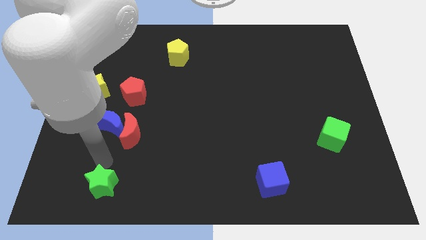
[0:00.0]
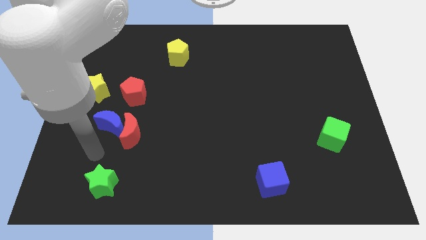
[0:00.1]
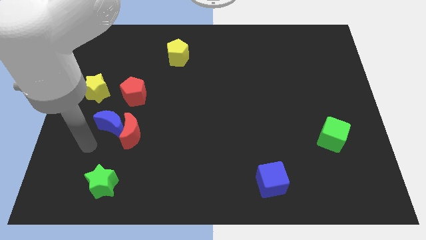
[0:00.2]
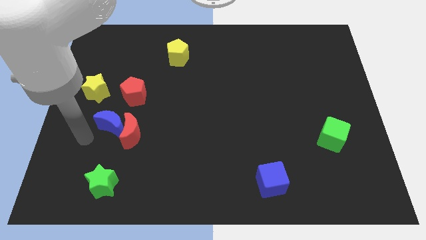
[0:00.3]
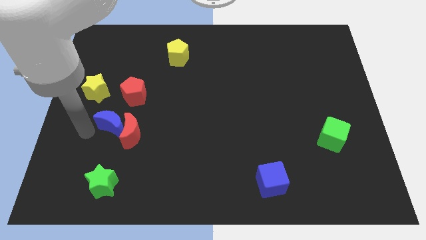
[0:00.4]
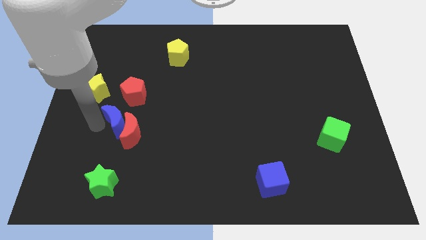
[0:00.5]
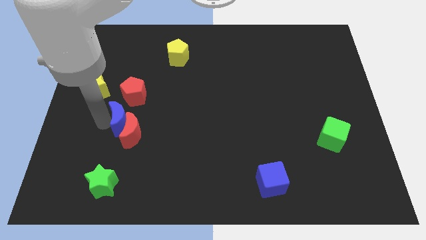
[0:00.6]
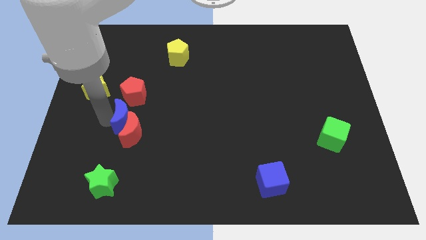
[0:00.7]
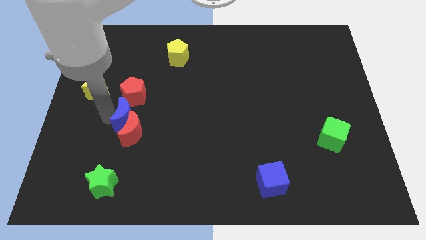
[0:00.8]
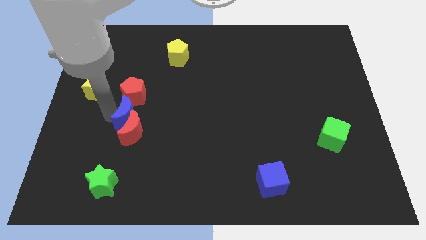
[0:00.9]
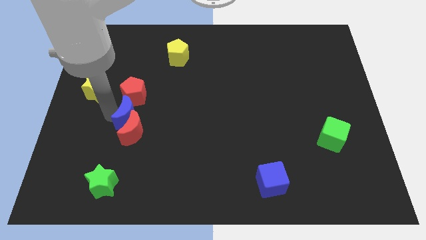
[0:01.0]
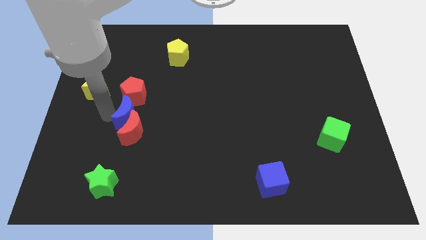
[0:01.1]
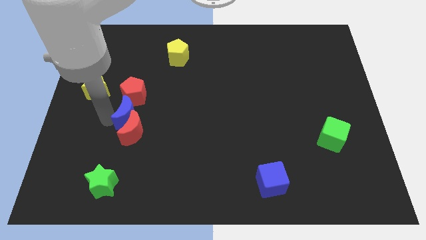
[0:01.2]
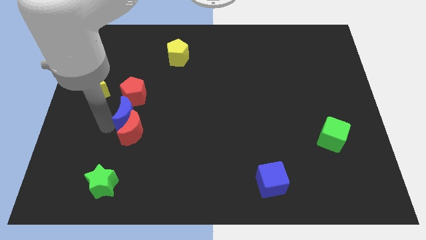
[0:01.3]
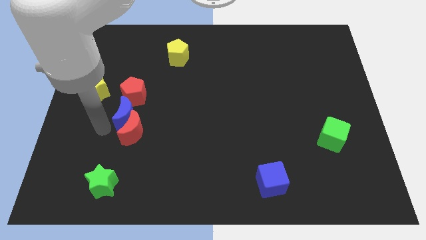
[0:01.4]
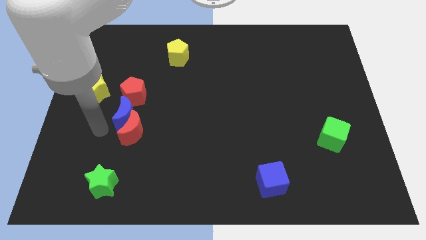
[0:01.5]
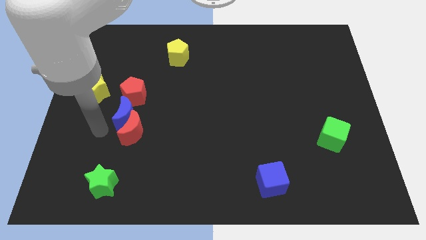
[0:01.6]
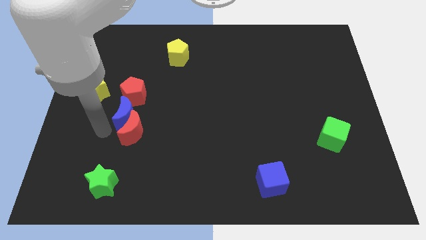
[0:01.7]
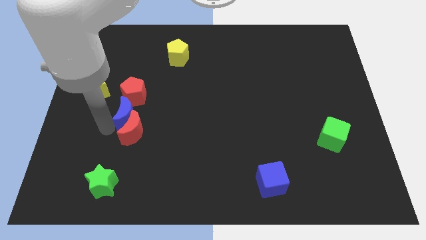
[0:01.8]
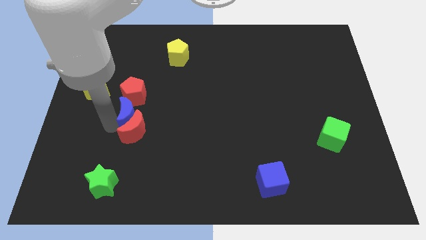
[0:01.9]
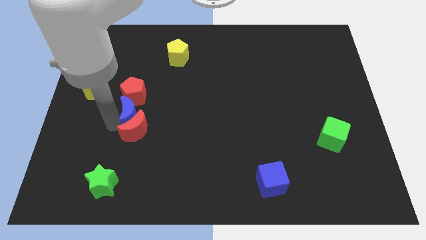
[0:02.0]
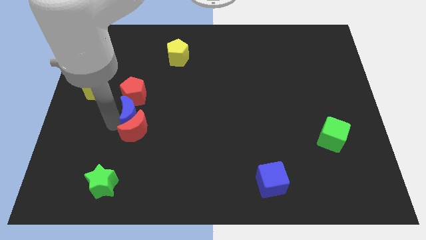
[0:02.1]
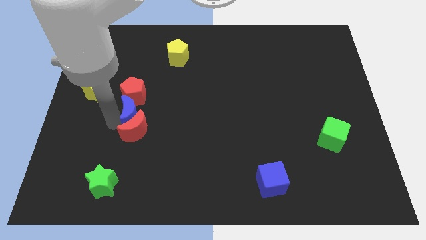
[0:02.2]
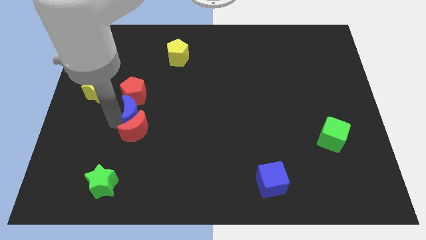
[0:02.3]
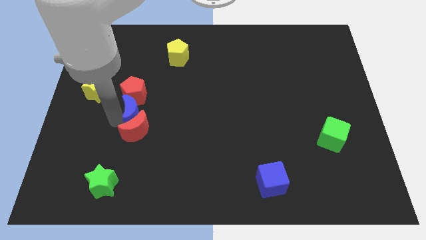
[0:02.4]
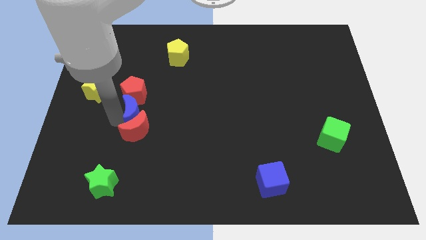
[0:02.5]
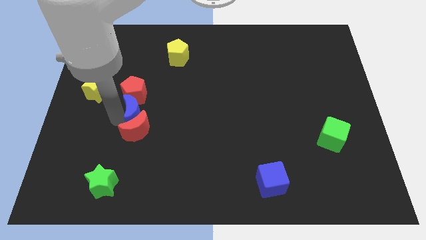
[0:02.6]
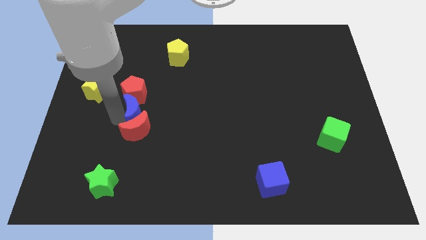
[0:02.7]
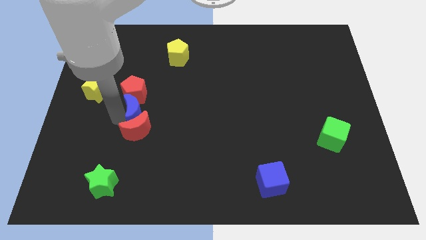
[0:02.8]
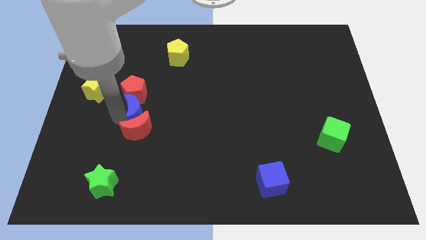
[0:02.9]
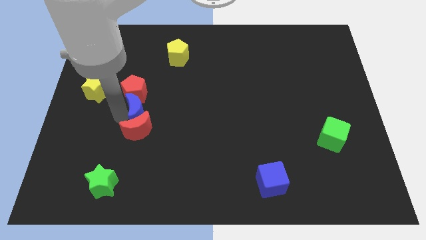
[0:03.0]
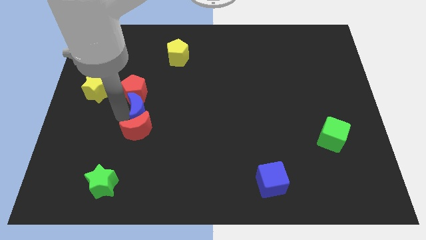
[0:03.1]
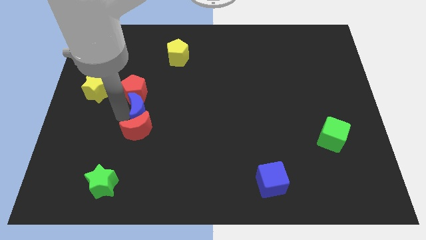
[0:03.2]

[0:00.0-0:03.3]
place the blue crescent below the red pentagon

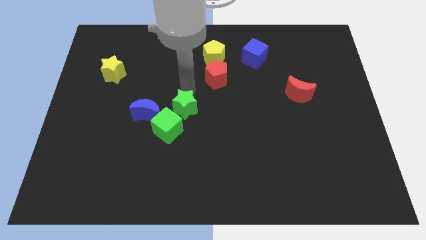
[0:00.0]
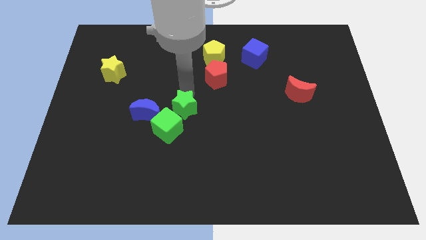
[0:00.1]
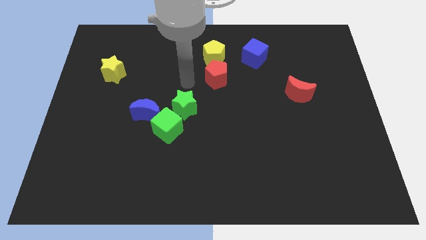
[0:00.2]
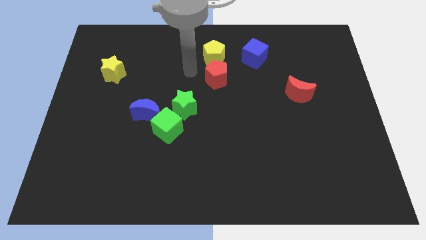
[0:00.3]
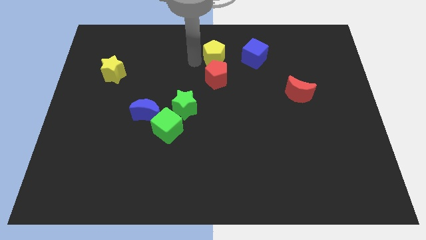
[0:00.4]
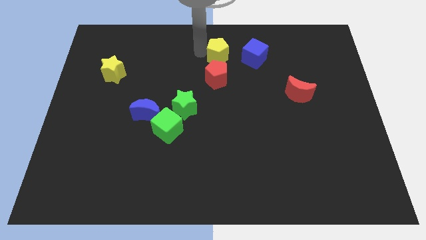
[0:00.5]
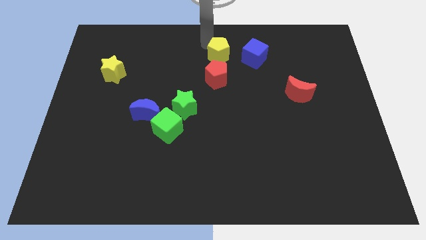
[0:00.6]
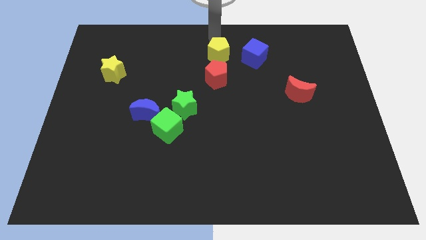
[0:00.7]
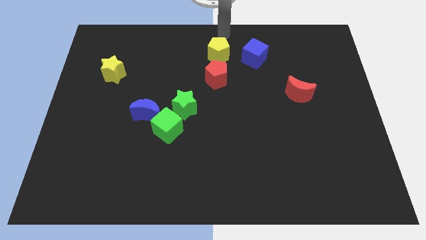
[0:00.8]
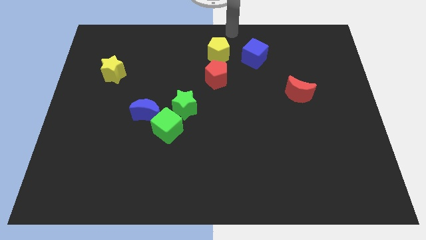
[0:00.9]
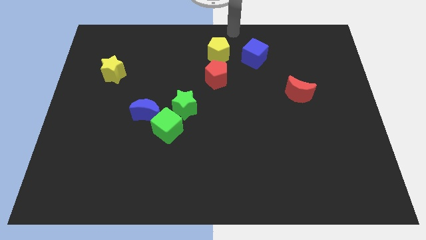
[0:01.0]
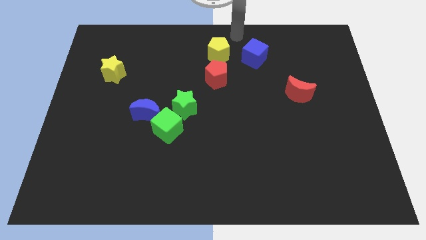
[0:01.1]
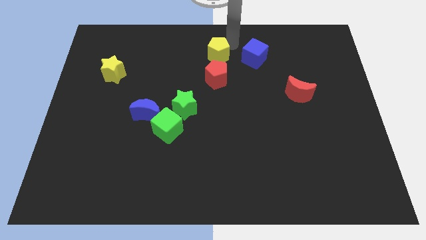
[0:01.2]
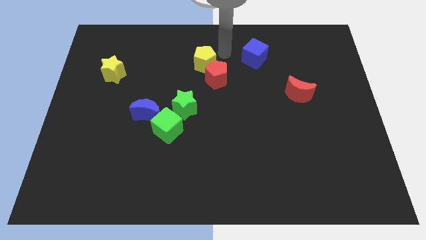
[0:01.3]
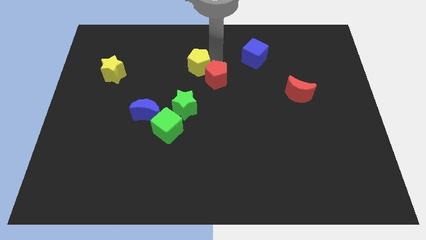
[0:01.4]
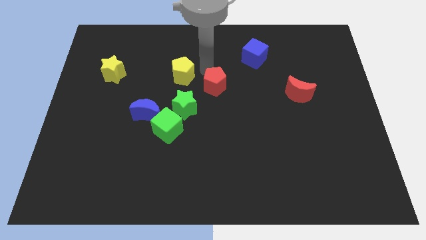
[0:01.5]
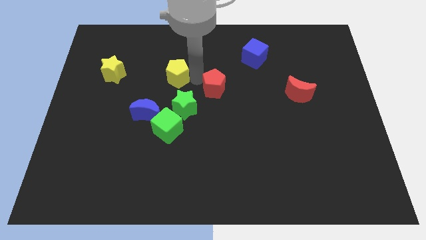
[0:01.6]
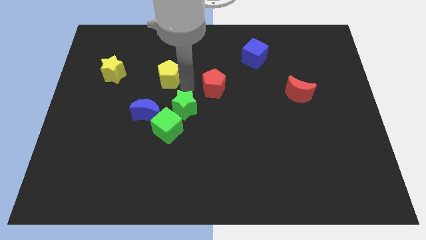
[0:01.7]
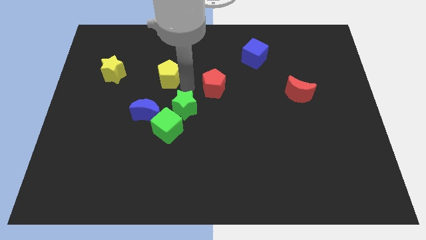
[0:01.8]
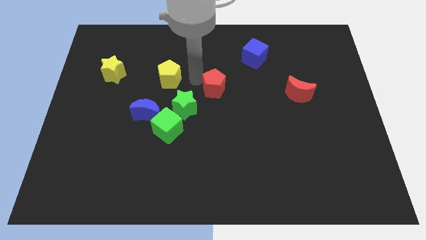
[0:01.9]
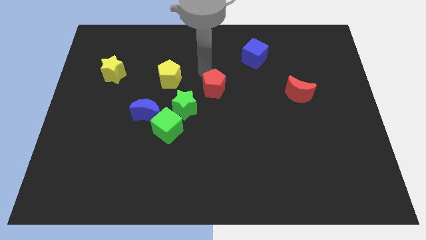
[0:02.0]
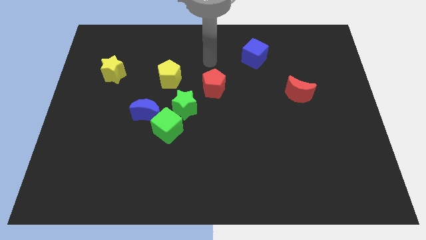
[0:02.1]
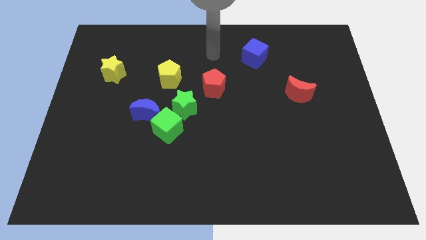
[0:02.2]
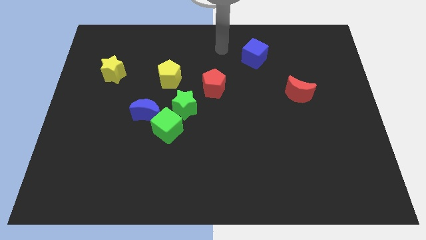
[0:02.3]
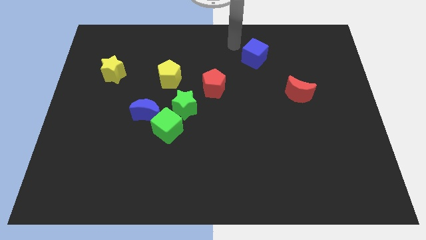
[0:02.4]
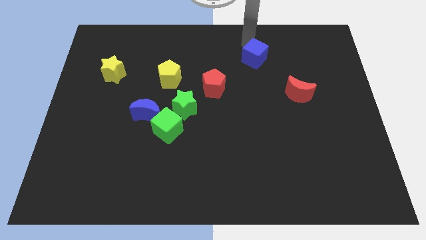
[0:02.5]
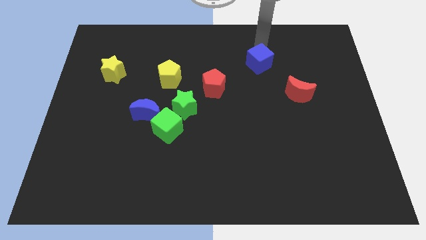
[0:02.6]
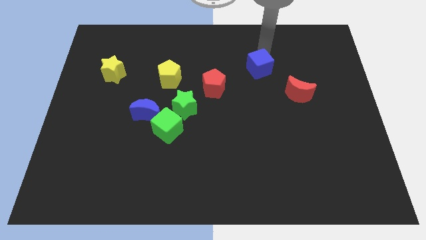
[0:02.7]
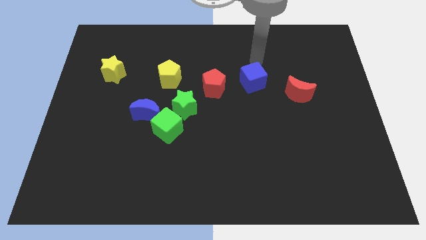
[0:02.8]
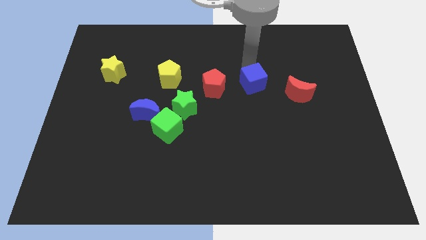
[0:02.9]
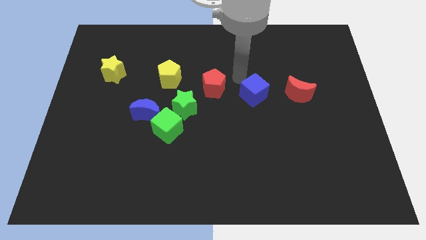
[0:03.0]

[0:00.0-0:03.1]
move the blue cube in between the red blocks

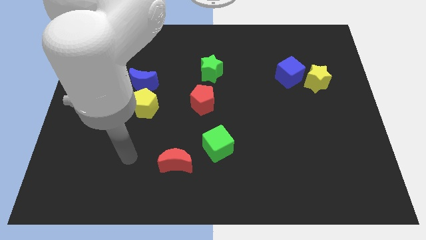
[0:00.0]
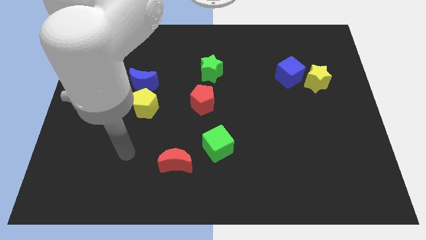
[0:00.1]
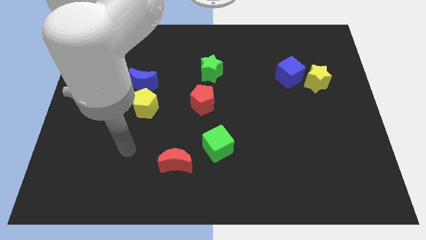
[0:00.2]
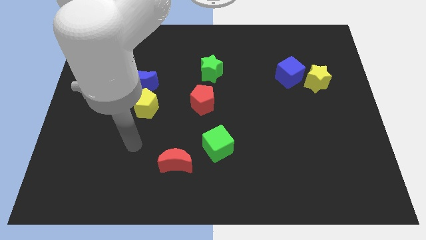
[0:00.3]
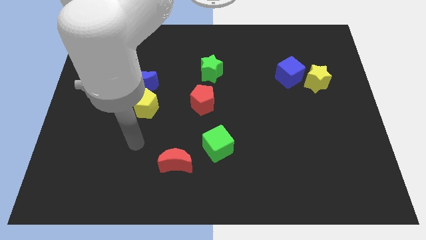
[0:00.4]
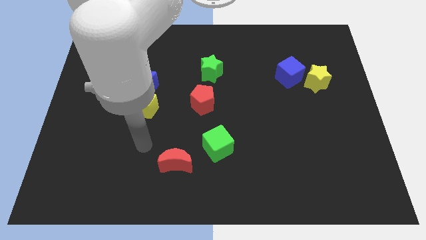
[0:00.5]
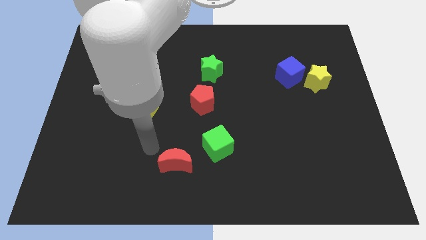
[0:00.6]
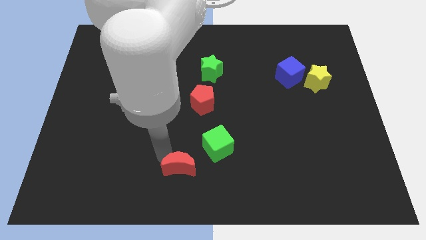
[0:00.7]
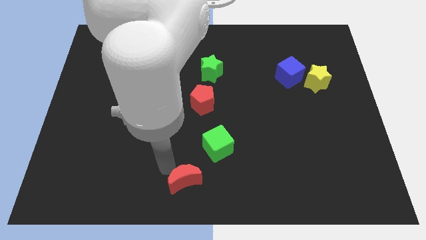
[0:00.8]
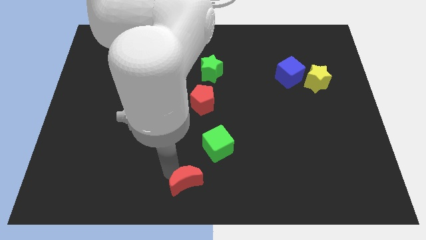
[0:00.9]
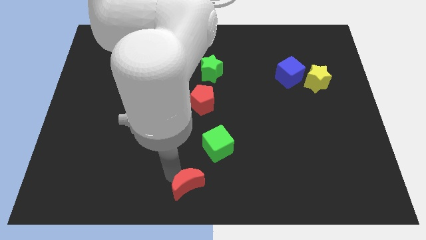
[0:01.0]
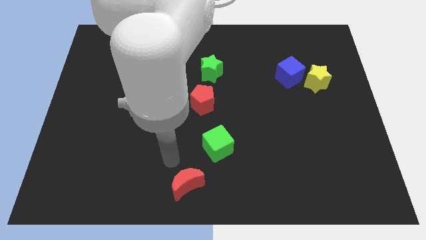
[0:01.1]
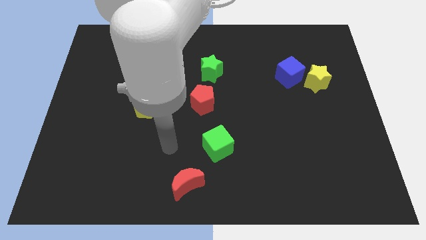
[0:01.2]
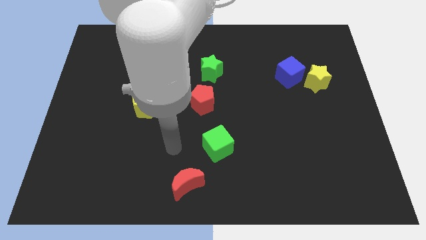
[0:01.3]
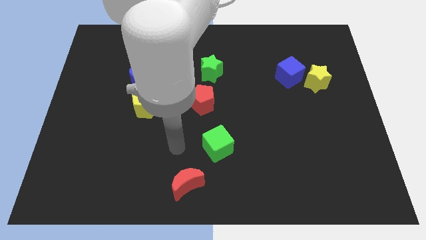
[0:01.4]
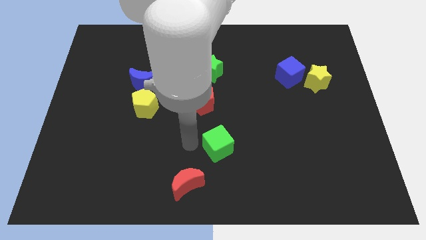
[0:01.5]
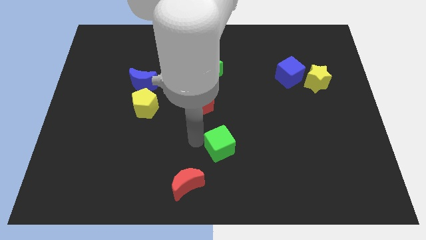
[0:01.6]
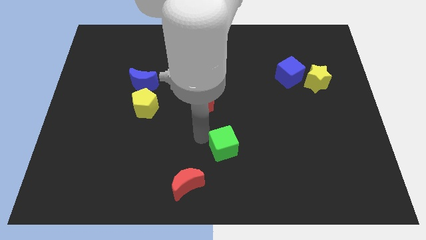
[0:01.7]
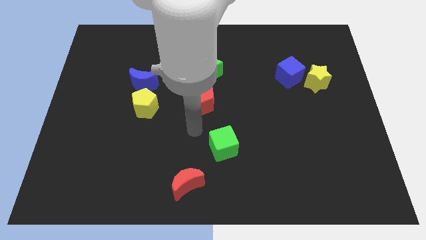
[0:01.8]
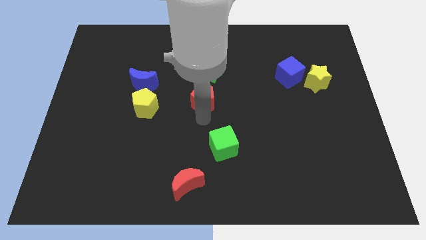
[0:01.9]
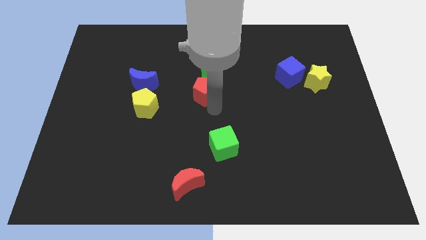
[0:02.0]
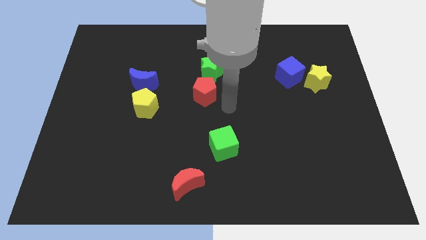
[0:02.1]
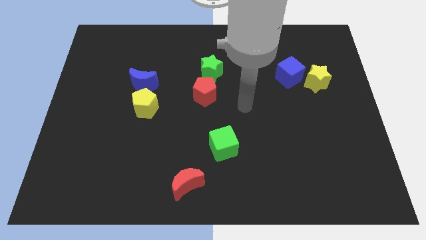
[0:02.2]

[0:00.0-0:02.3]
move the red pentagon towards the green star

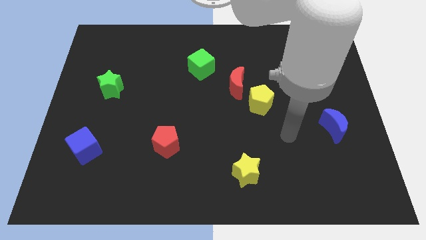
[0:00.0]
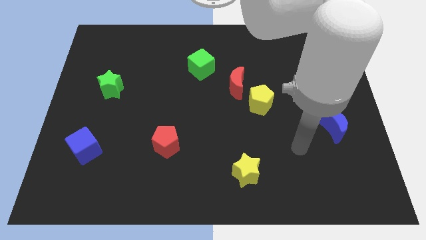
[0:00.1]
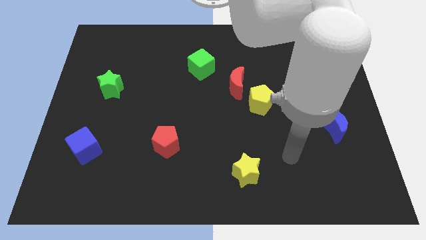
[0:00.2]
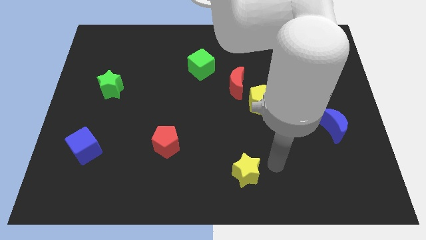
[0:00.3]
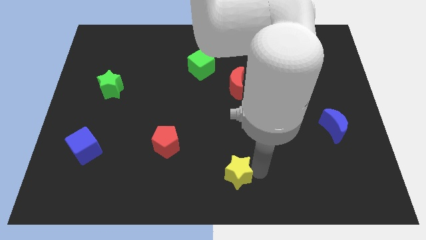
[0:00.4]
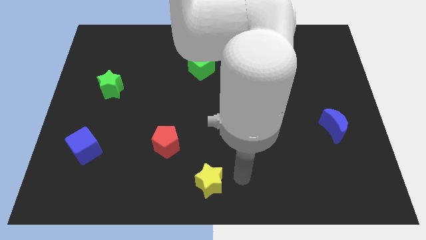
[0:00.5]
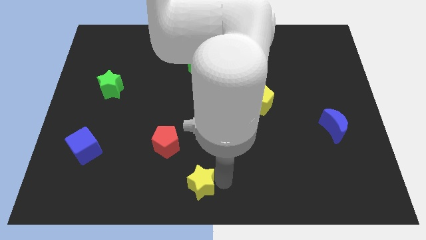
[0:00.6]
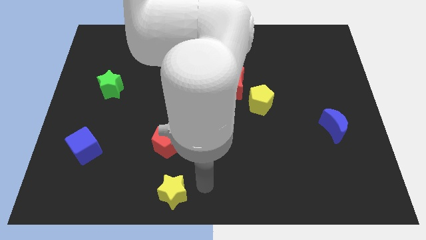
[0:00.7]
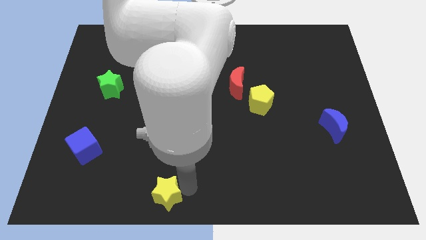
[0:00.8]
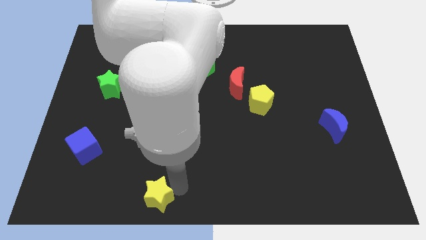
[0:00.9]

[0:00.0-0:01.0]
place the yellow star below the red pentagon
